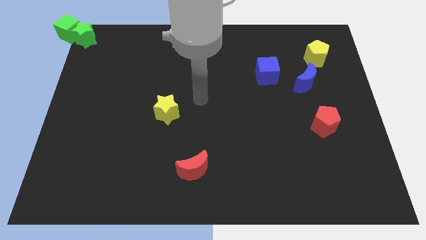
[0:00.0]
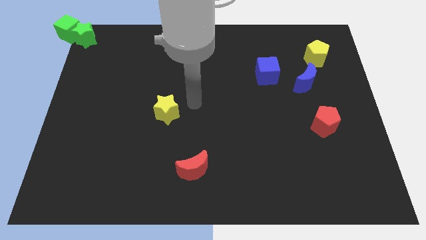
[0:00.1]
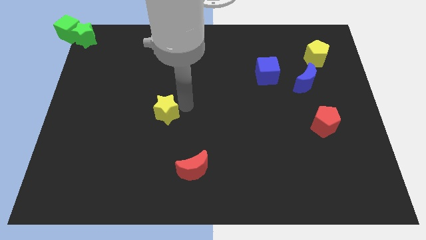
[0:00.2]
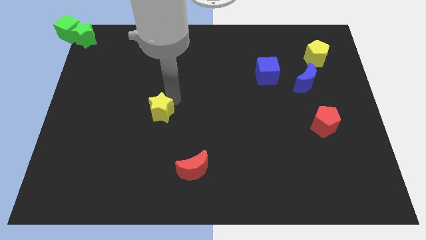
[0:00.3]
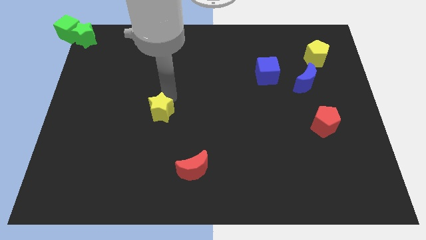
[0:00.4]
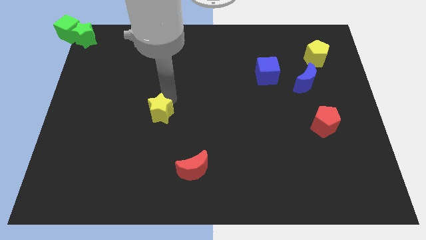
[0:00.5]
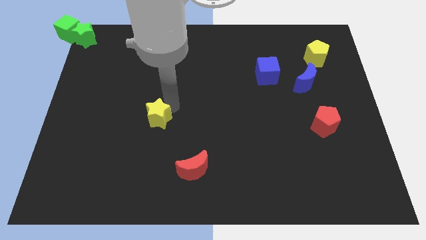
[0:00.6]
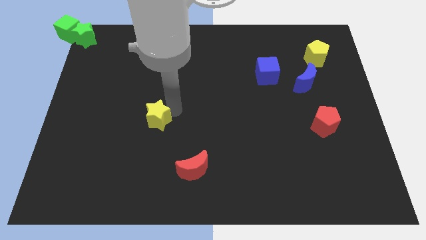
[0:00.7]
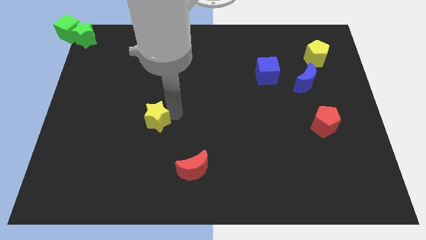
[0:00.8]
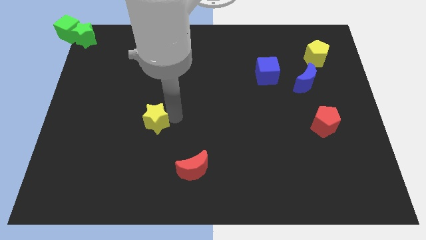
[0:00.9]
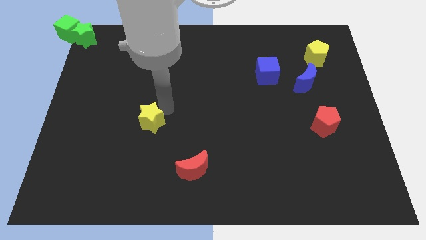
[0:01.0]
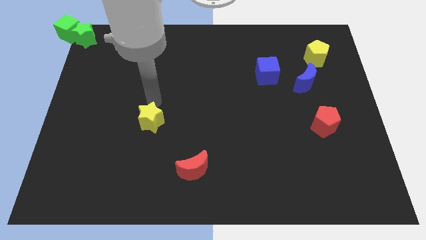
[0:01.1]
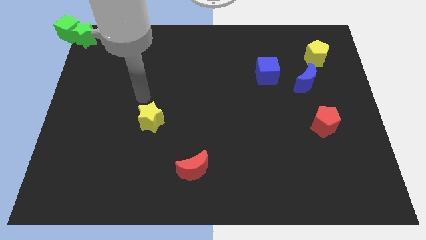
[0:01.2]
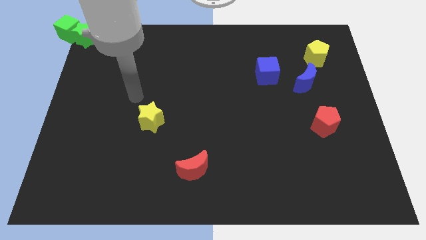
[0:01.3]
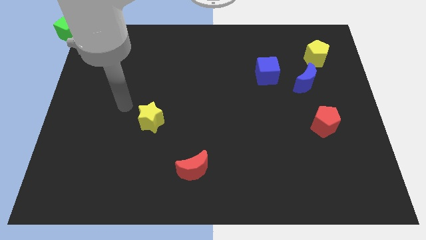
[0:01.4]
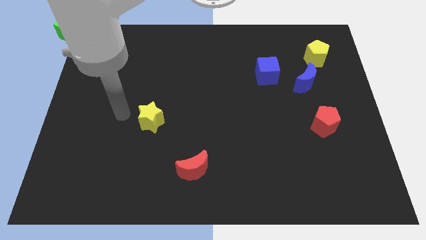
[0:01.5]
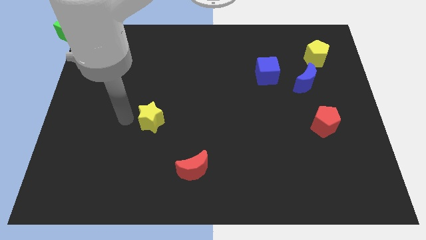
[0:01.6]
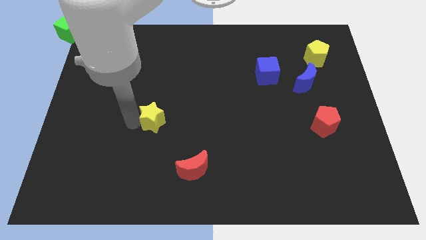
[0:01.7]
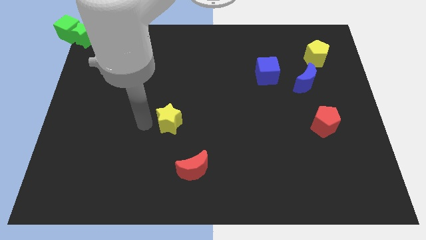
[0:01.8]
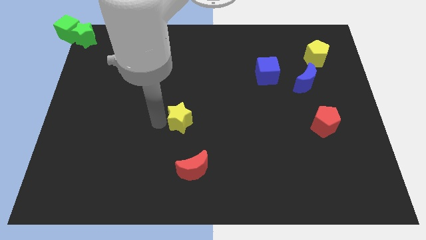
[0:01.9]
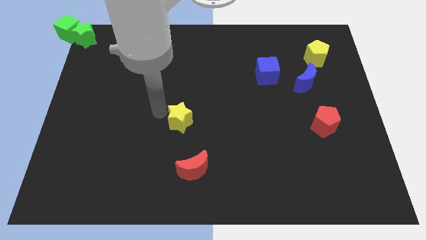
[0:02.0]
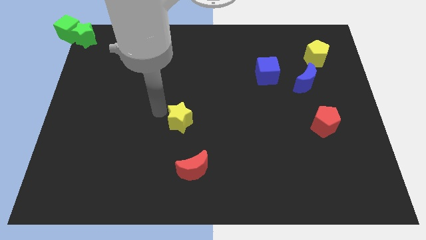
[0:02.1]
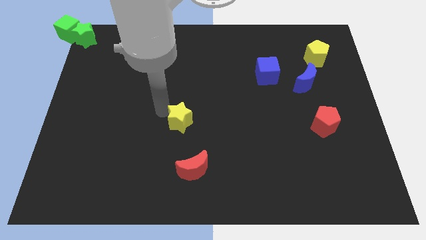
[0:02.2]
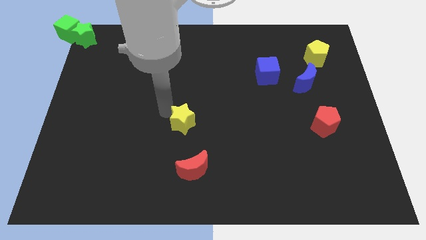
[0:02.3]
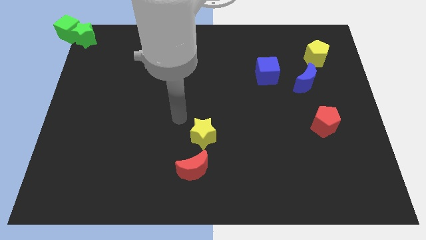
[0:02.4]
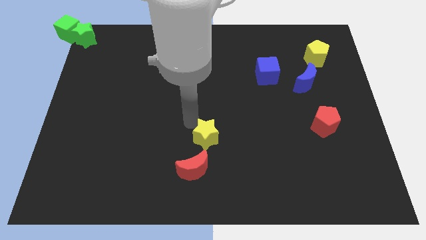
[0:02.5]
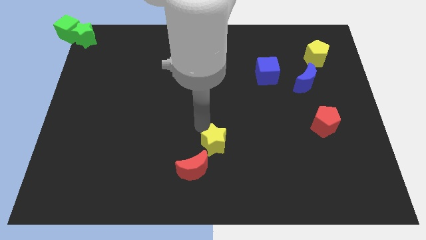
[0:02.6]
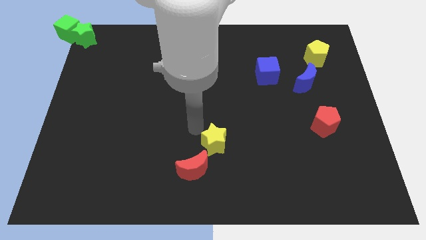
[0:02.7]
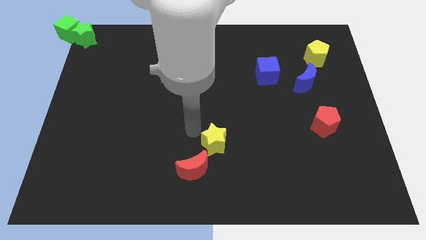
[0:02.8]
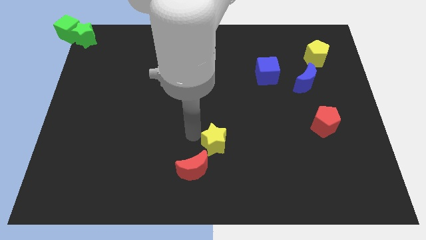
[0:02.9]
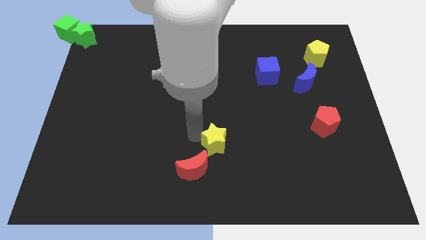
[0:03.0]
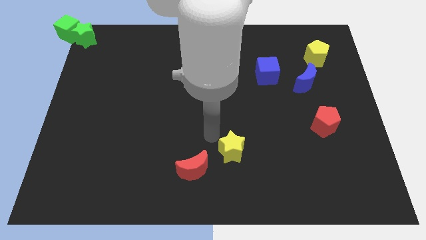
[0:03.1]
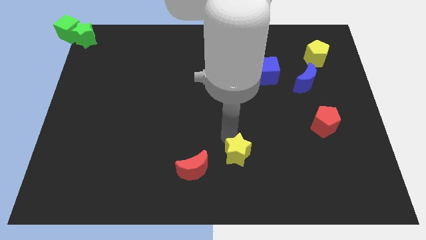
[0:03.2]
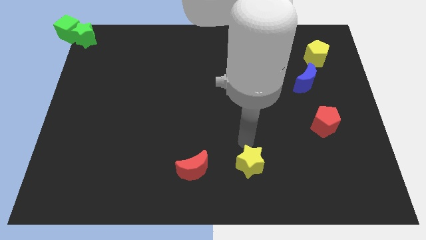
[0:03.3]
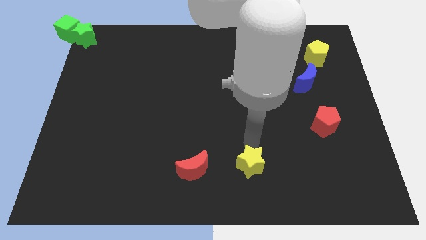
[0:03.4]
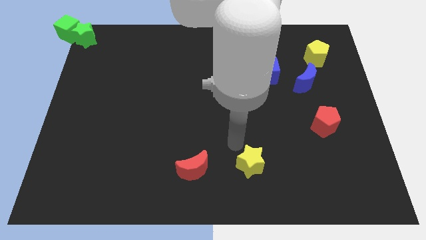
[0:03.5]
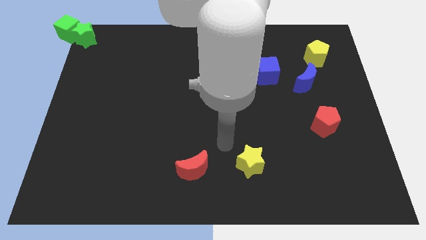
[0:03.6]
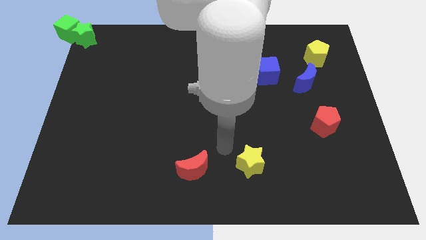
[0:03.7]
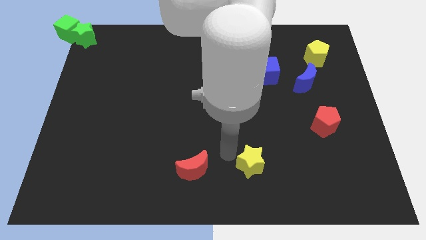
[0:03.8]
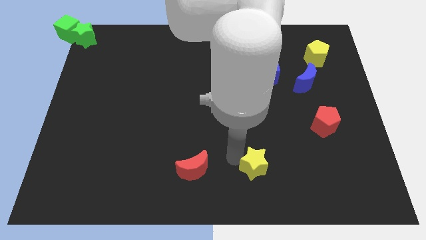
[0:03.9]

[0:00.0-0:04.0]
place the yellow star to the right of the red moon

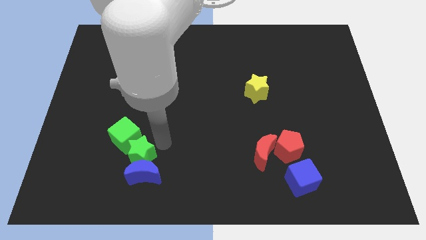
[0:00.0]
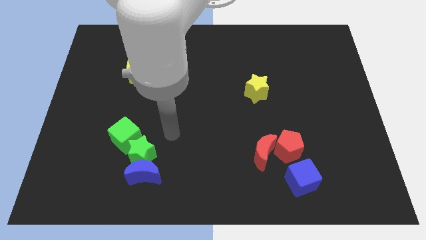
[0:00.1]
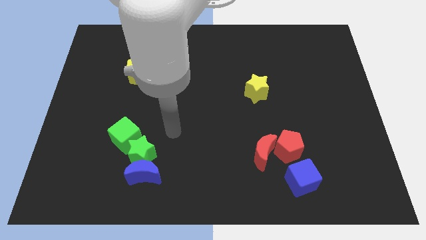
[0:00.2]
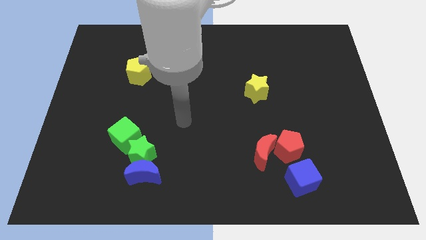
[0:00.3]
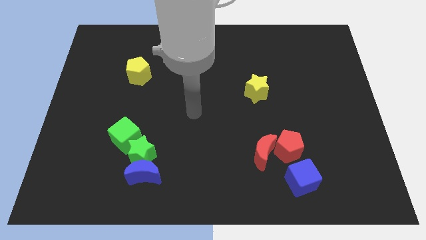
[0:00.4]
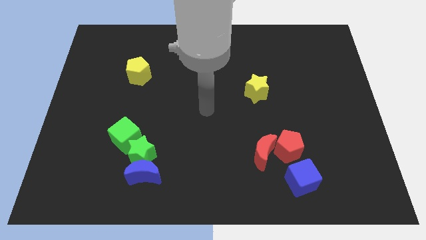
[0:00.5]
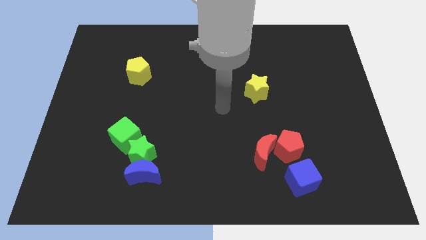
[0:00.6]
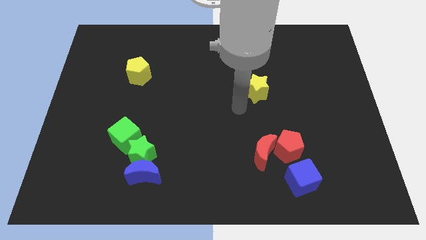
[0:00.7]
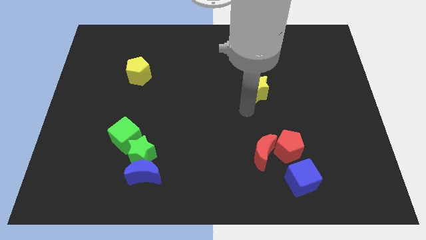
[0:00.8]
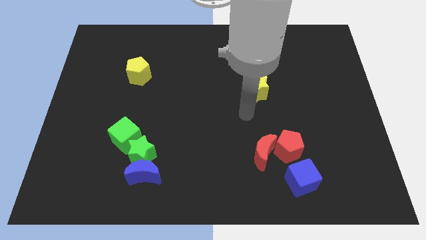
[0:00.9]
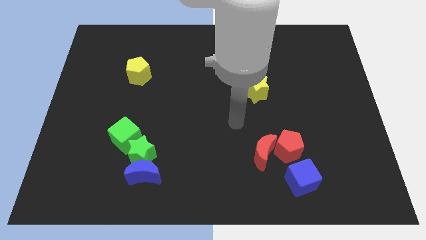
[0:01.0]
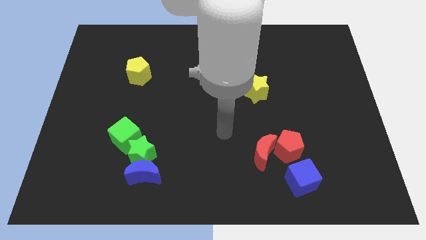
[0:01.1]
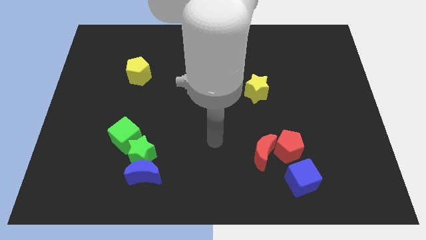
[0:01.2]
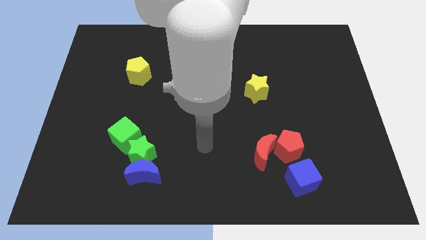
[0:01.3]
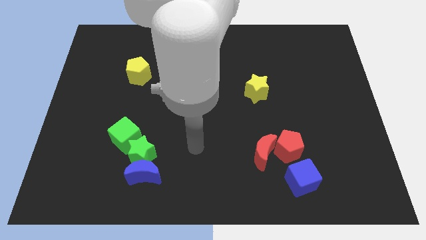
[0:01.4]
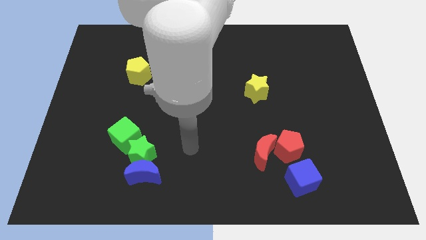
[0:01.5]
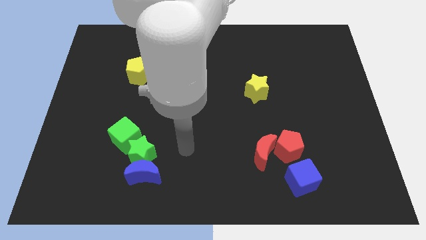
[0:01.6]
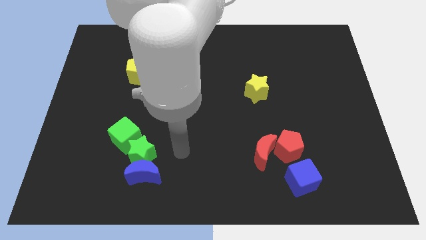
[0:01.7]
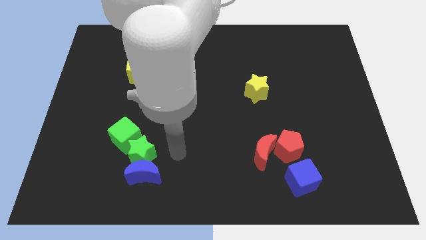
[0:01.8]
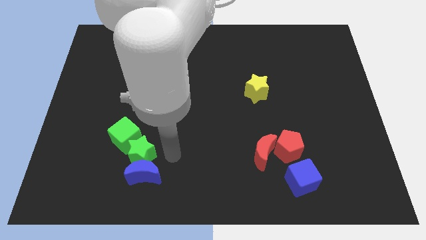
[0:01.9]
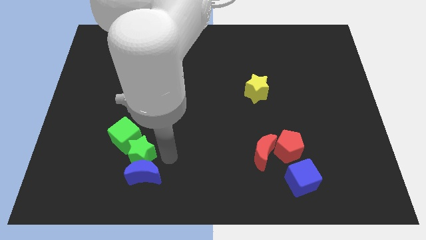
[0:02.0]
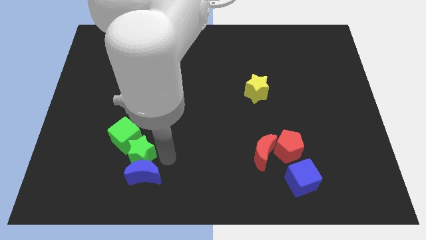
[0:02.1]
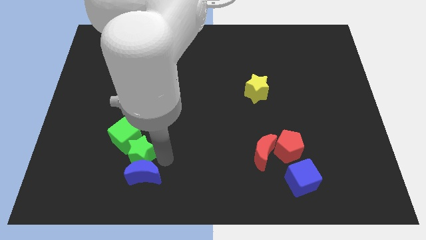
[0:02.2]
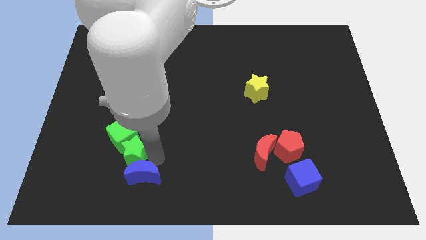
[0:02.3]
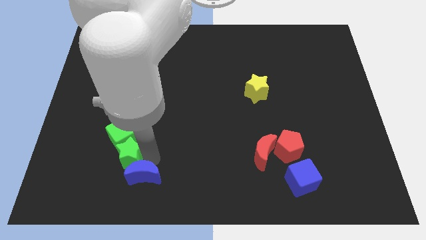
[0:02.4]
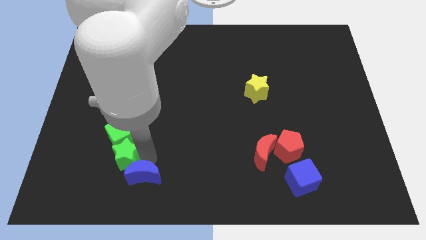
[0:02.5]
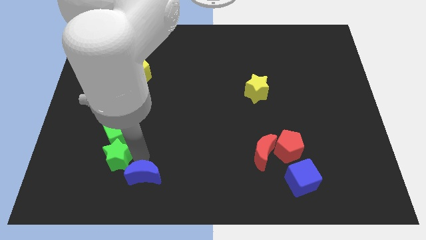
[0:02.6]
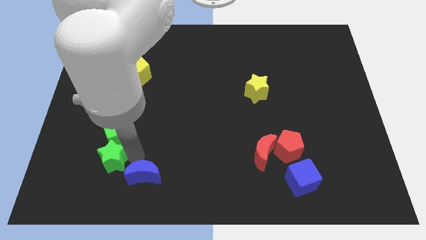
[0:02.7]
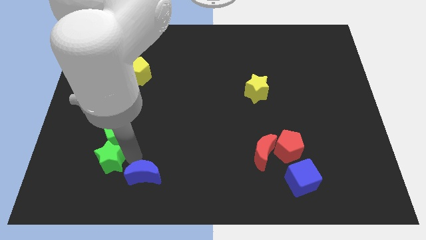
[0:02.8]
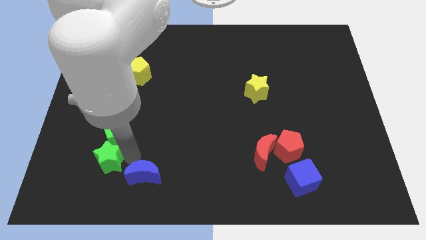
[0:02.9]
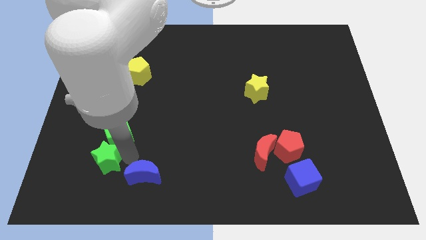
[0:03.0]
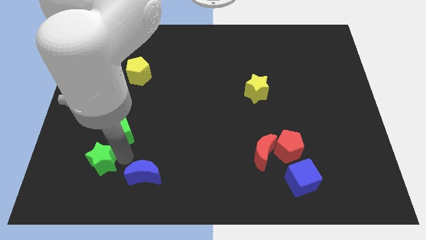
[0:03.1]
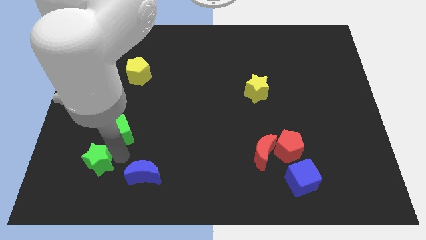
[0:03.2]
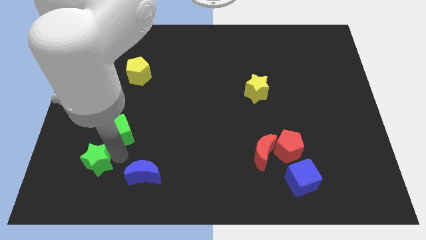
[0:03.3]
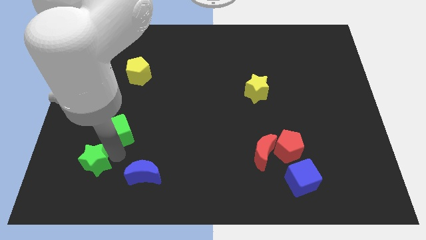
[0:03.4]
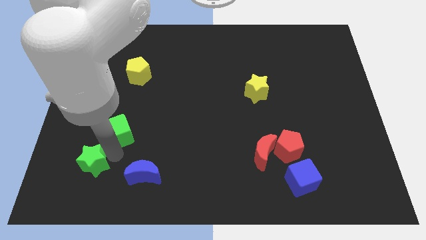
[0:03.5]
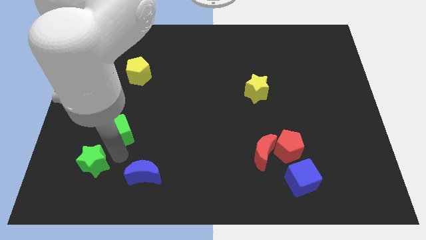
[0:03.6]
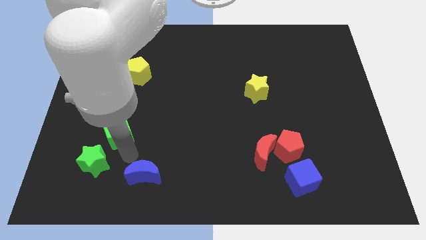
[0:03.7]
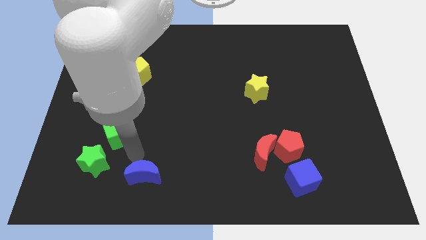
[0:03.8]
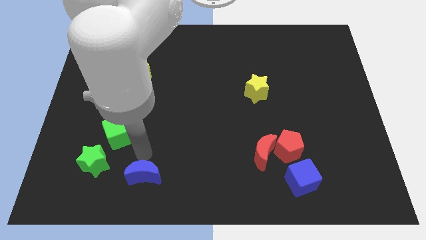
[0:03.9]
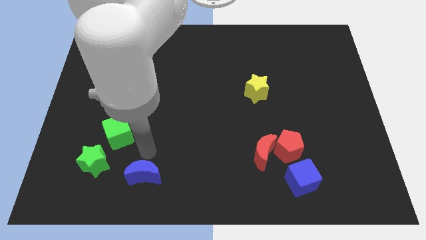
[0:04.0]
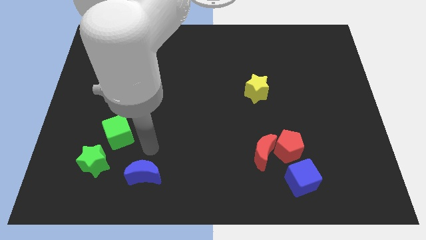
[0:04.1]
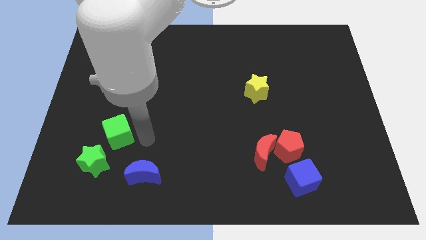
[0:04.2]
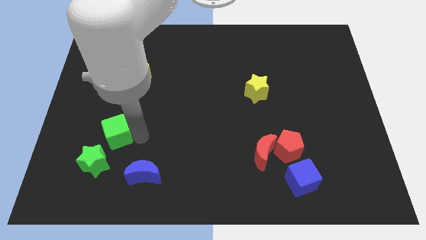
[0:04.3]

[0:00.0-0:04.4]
separate the green star from the green cube

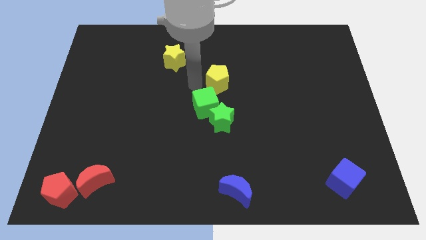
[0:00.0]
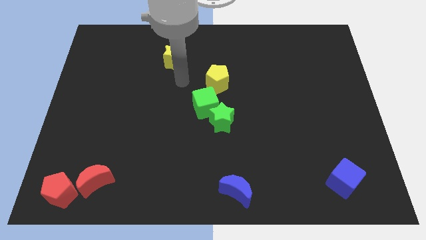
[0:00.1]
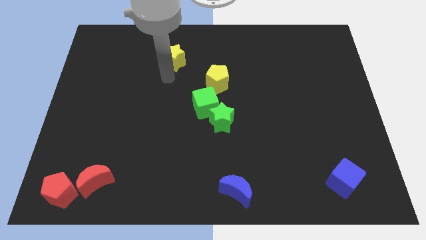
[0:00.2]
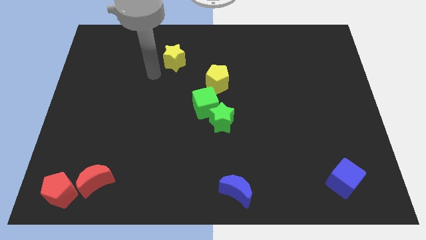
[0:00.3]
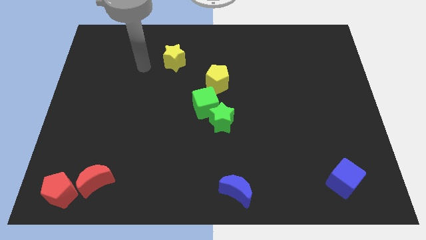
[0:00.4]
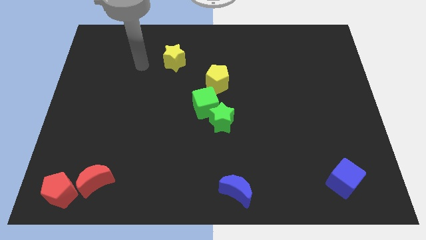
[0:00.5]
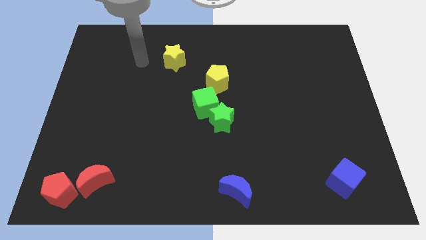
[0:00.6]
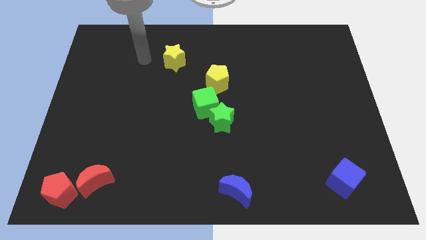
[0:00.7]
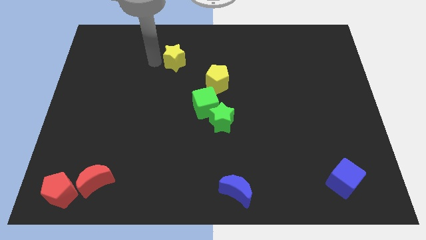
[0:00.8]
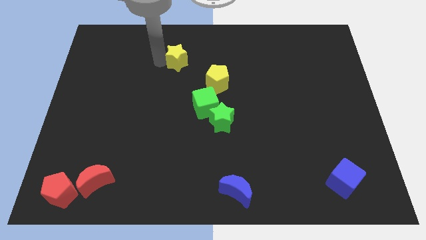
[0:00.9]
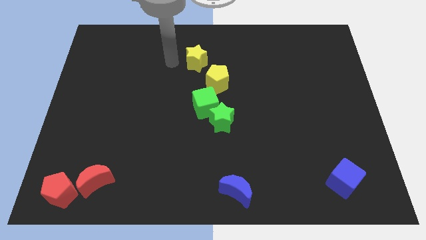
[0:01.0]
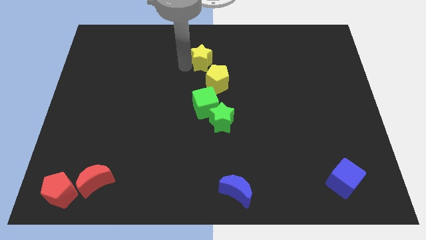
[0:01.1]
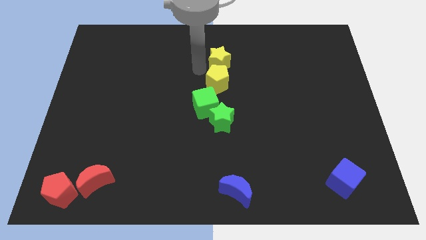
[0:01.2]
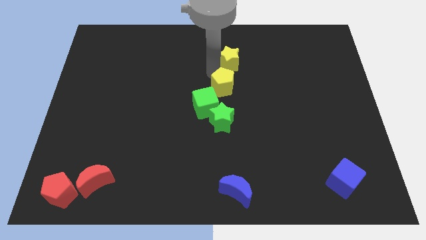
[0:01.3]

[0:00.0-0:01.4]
bring the yellow star at the top side of the yellow pentagon
